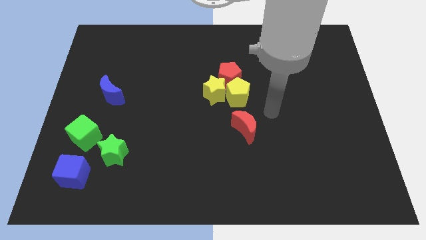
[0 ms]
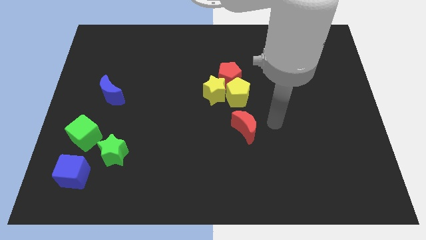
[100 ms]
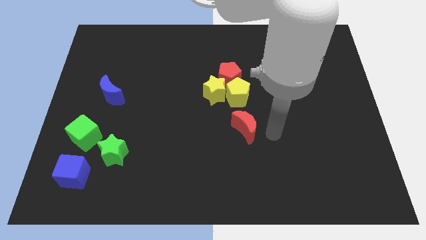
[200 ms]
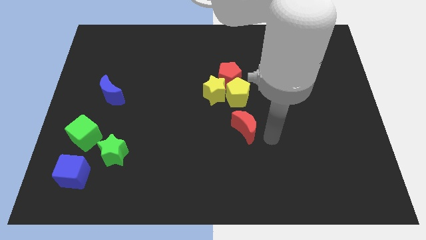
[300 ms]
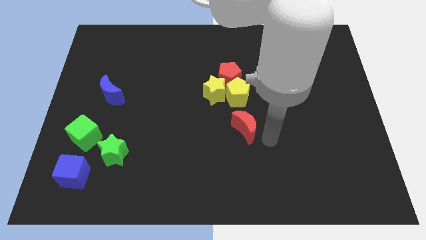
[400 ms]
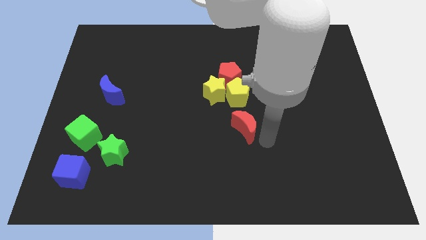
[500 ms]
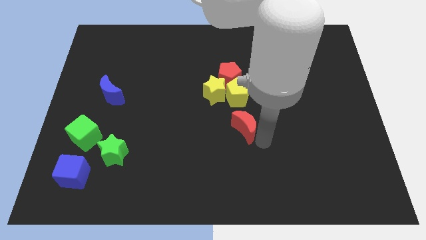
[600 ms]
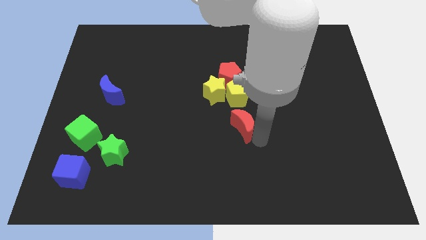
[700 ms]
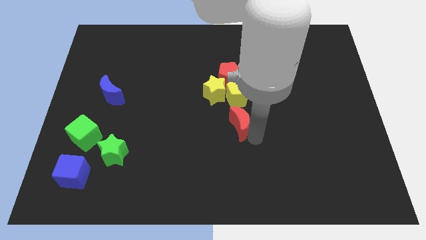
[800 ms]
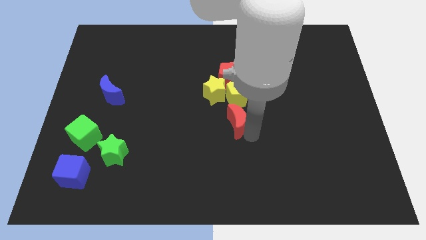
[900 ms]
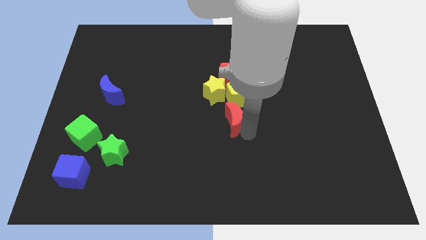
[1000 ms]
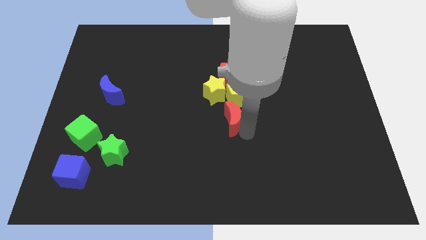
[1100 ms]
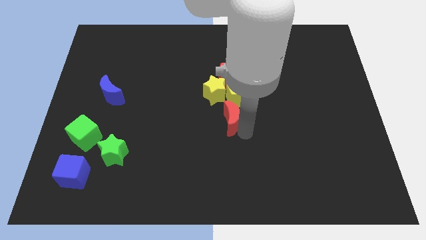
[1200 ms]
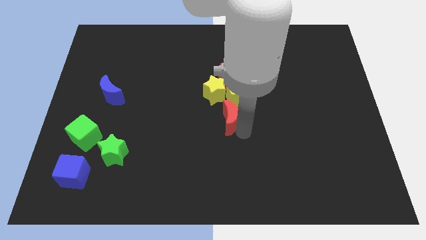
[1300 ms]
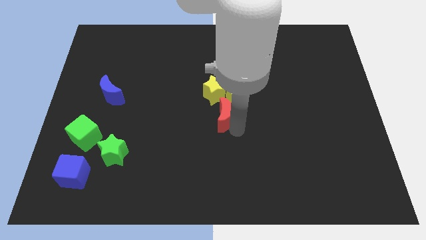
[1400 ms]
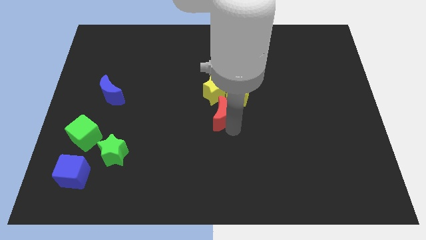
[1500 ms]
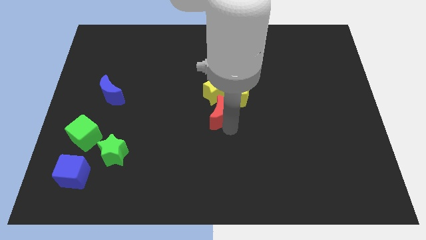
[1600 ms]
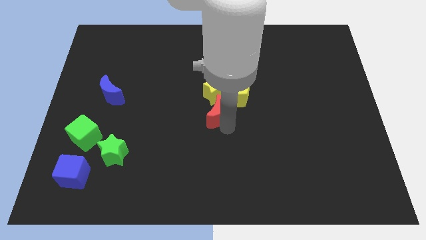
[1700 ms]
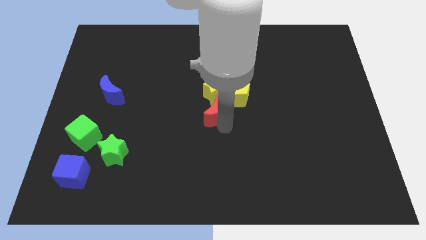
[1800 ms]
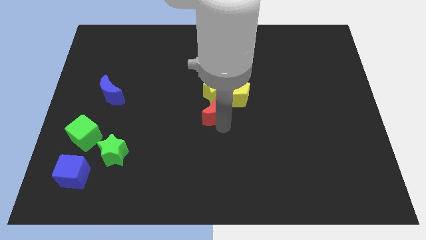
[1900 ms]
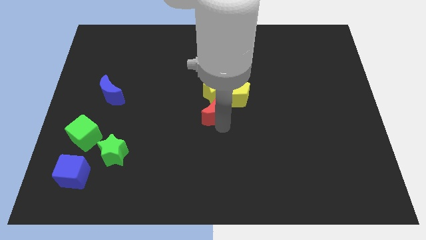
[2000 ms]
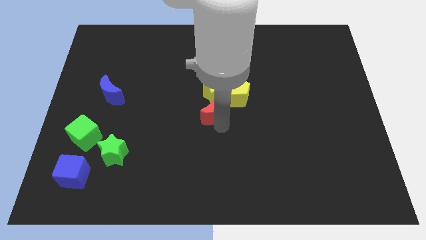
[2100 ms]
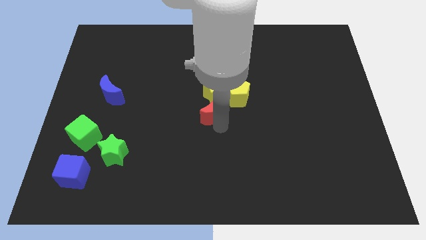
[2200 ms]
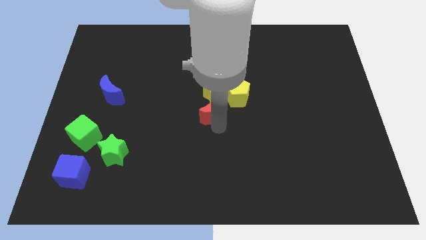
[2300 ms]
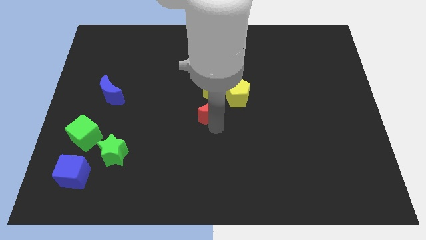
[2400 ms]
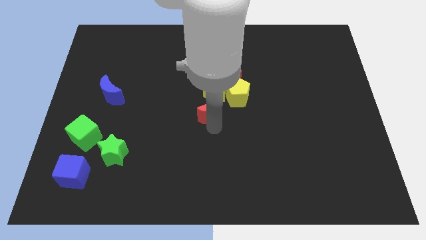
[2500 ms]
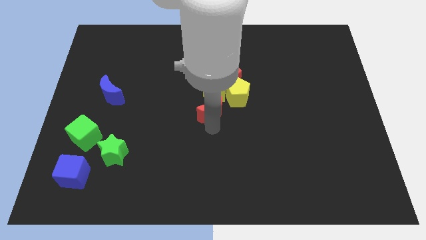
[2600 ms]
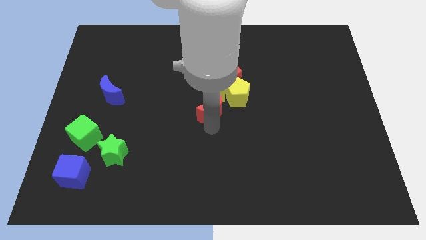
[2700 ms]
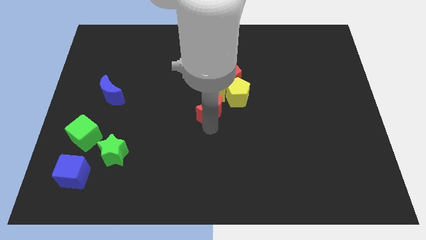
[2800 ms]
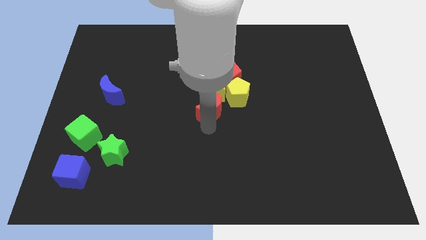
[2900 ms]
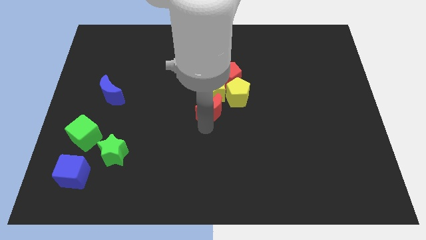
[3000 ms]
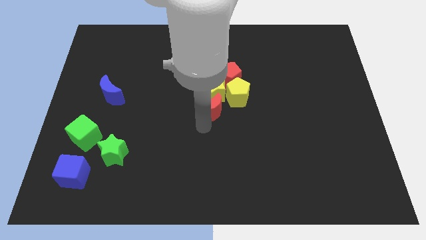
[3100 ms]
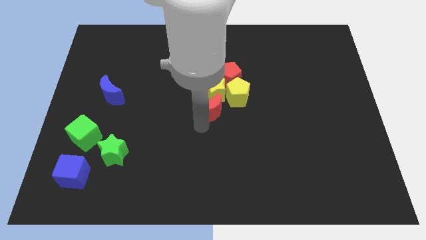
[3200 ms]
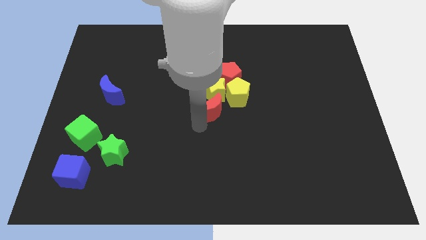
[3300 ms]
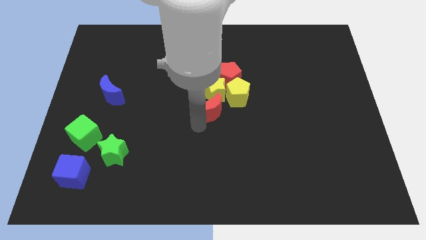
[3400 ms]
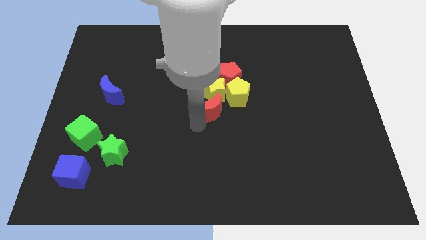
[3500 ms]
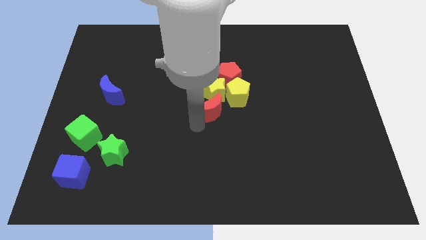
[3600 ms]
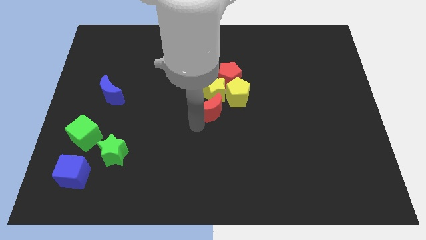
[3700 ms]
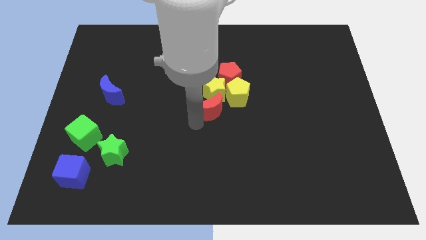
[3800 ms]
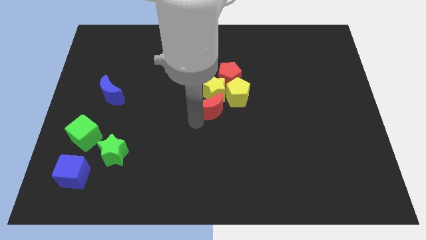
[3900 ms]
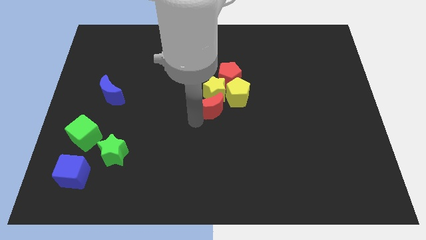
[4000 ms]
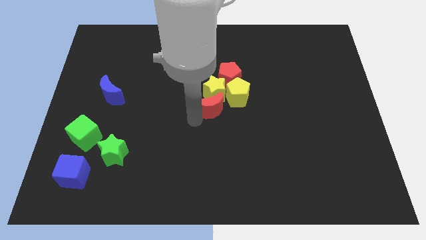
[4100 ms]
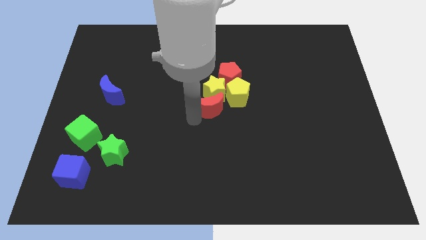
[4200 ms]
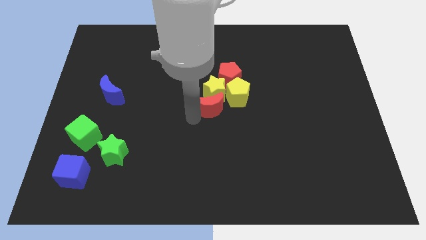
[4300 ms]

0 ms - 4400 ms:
push red crescent into yellow star

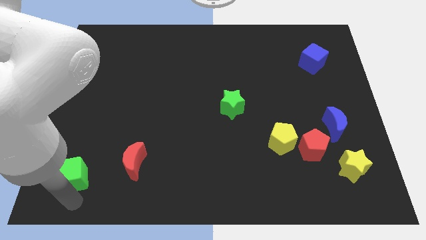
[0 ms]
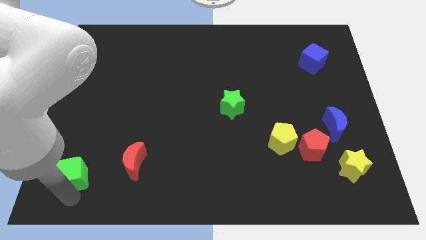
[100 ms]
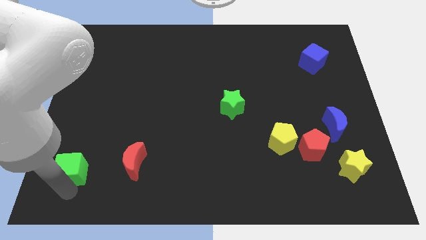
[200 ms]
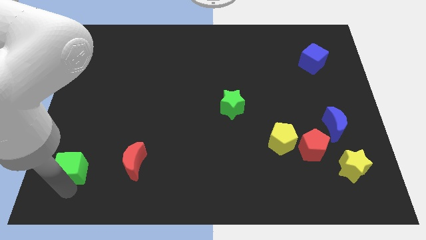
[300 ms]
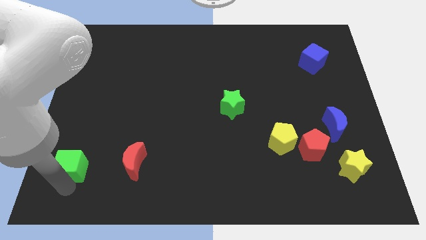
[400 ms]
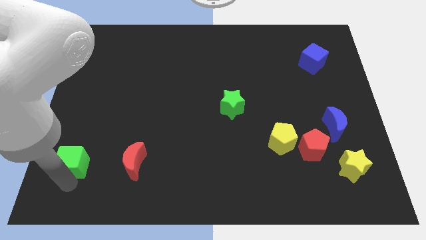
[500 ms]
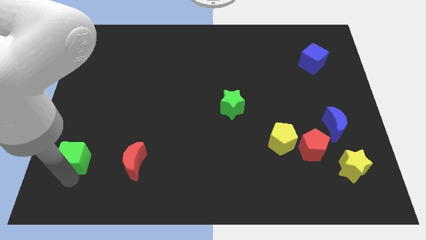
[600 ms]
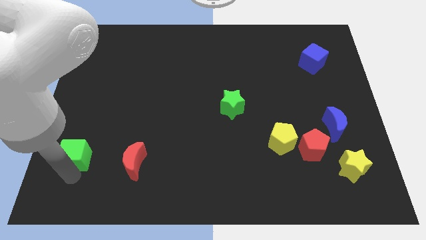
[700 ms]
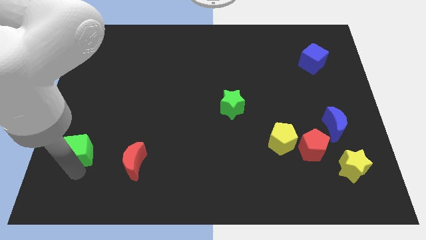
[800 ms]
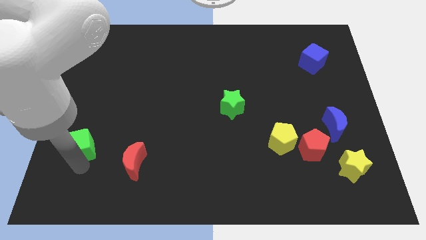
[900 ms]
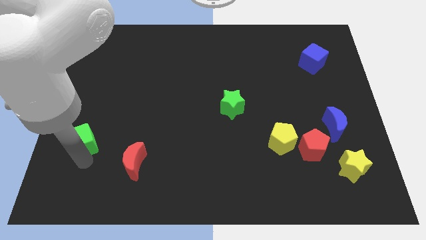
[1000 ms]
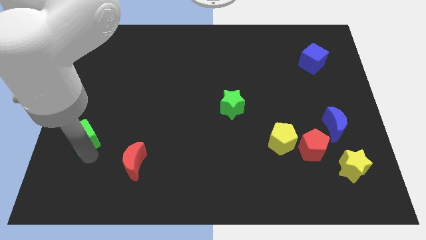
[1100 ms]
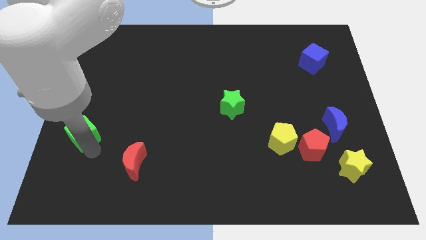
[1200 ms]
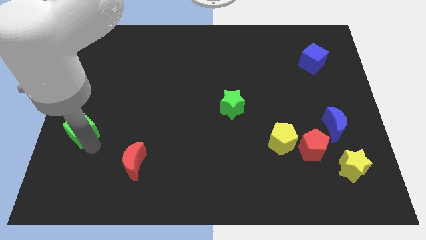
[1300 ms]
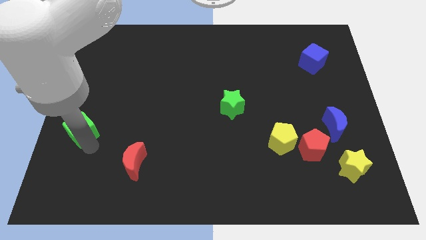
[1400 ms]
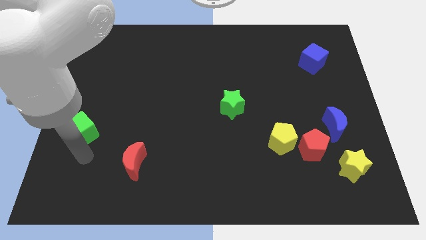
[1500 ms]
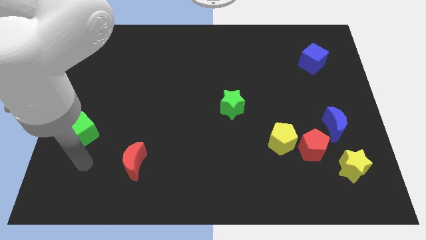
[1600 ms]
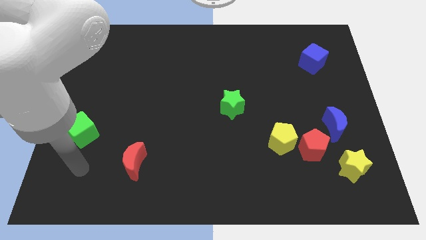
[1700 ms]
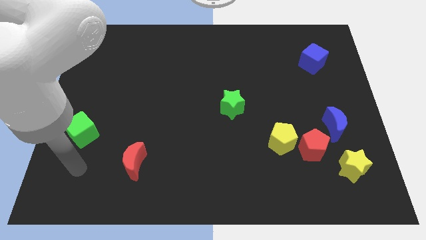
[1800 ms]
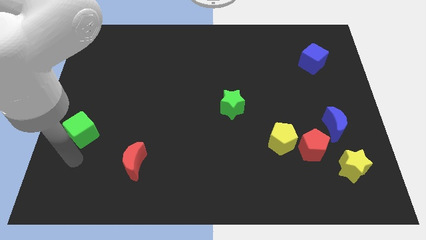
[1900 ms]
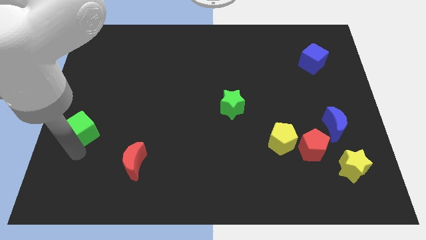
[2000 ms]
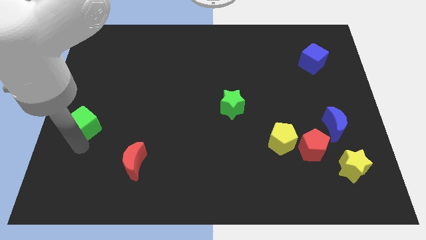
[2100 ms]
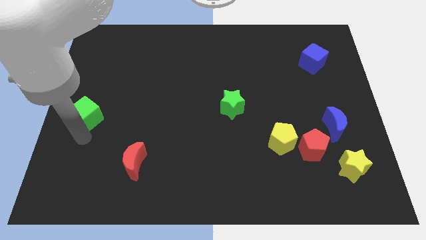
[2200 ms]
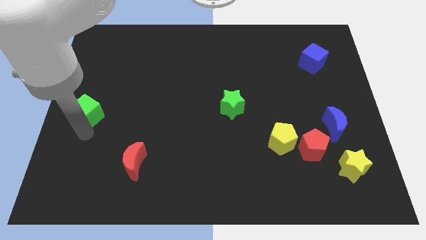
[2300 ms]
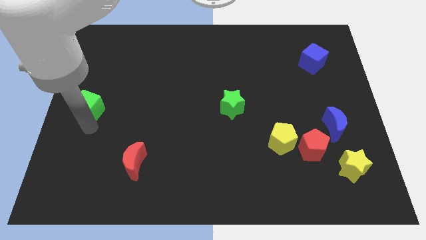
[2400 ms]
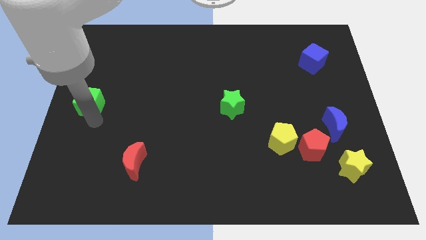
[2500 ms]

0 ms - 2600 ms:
push the green cube towards up

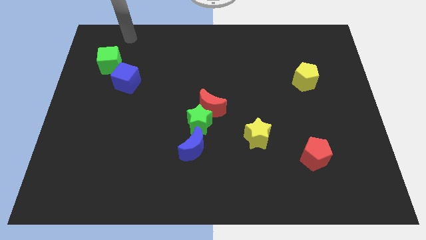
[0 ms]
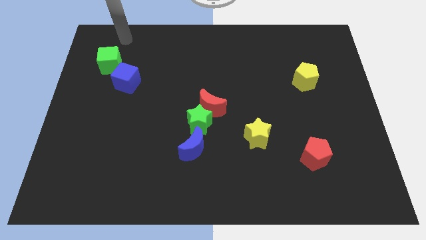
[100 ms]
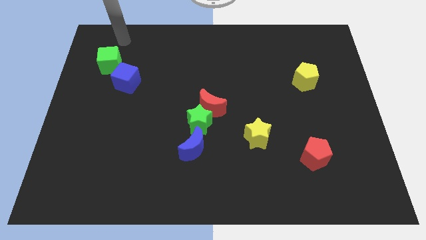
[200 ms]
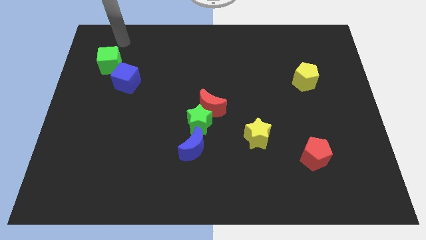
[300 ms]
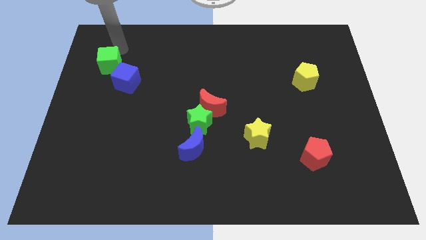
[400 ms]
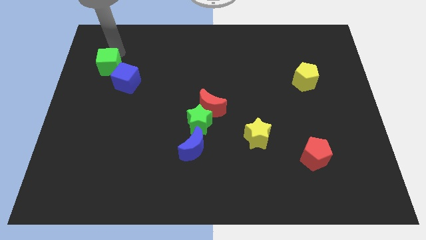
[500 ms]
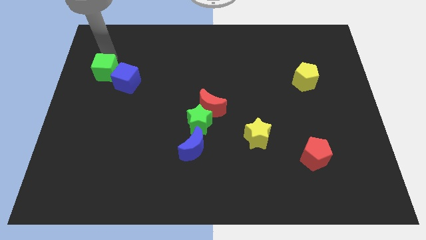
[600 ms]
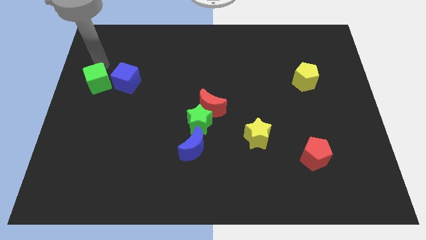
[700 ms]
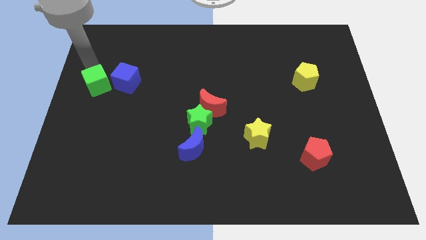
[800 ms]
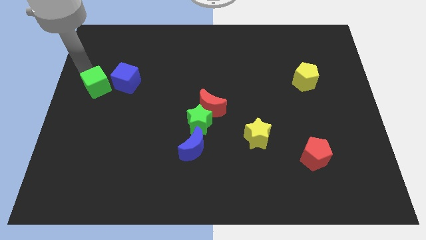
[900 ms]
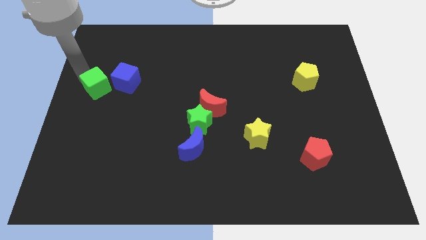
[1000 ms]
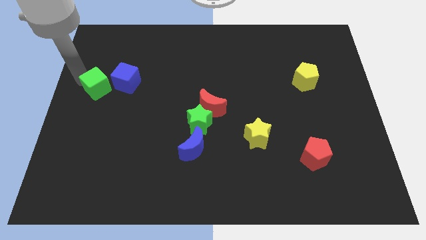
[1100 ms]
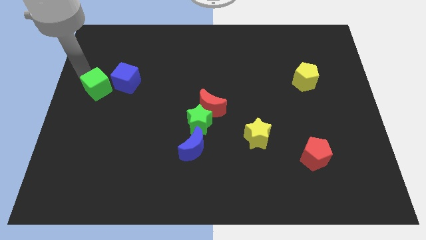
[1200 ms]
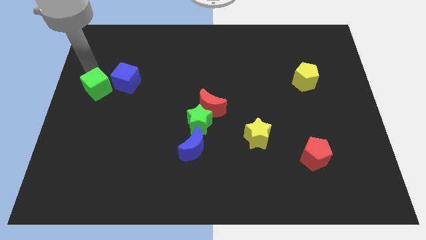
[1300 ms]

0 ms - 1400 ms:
push the green cube to the bottom left side of the blue cube

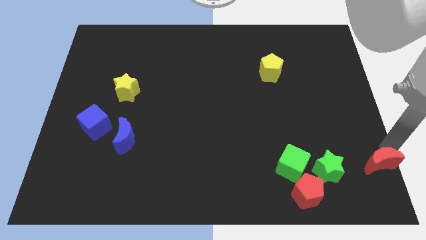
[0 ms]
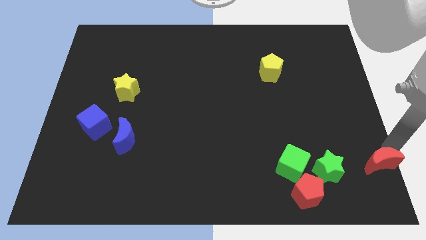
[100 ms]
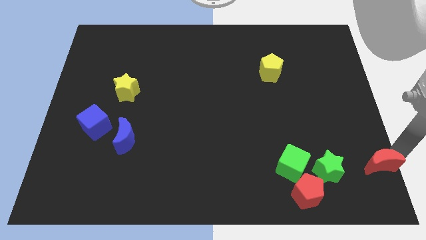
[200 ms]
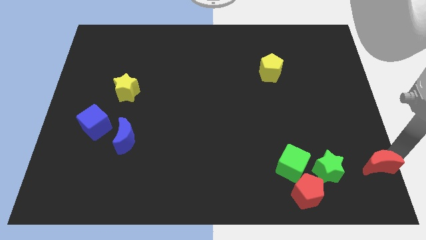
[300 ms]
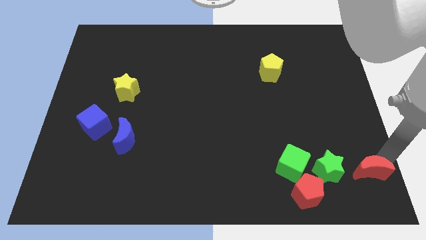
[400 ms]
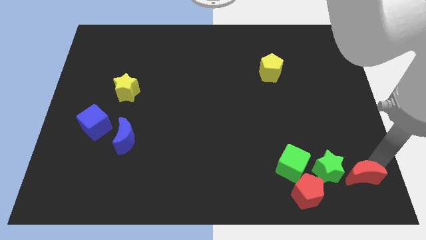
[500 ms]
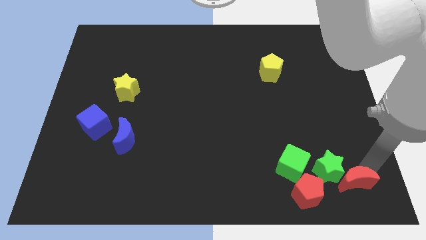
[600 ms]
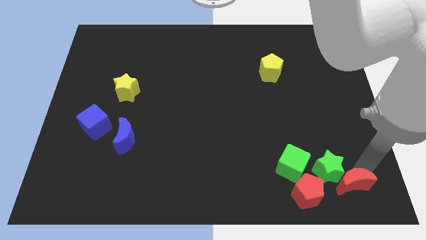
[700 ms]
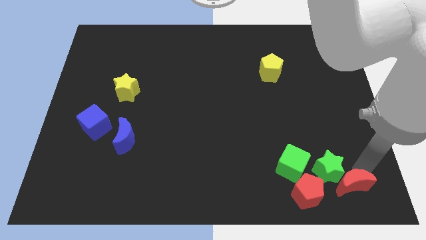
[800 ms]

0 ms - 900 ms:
push the red moon downward
